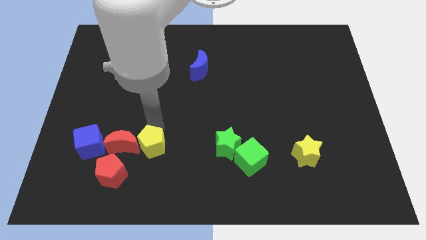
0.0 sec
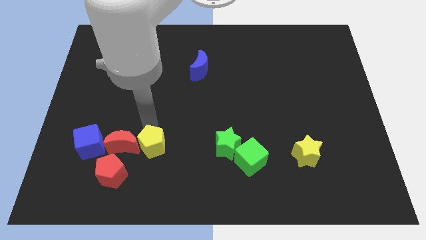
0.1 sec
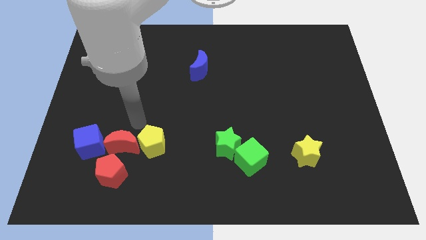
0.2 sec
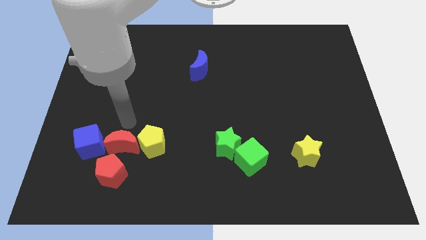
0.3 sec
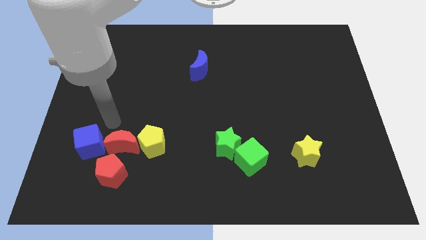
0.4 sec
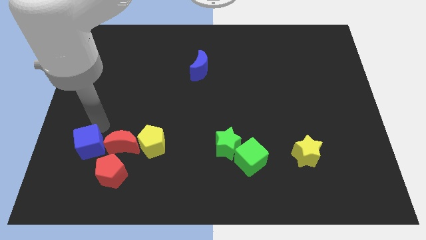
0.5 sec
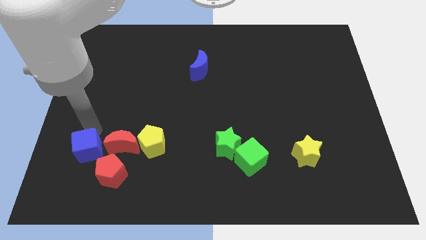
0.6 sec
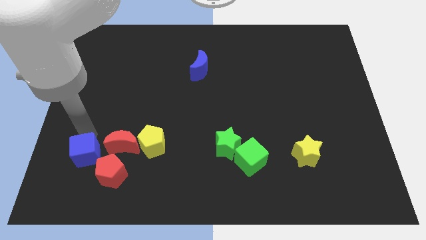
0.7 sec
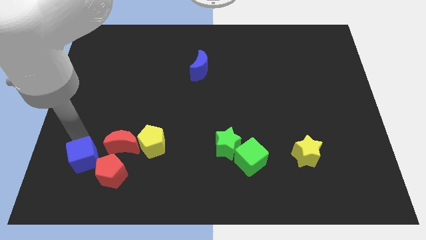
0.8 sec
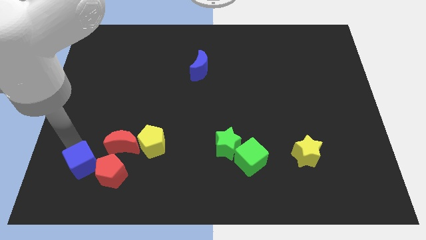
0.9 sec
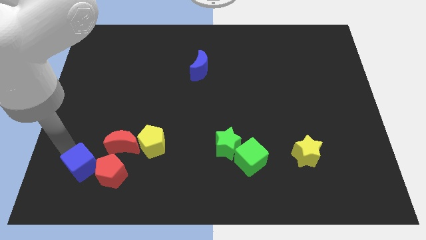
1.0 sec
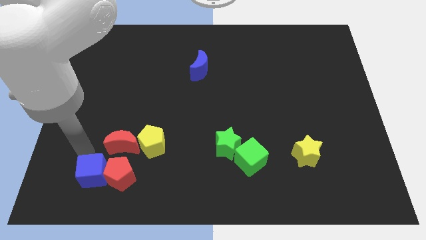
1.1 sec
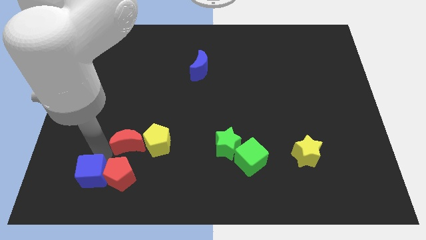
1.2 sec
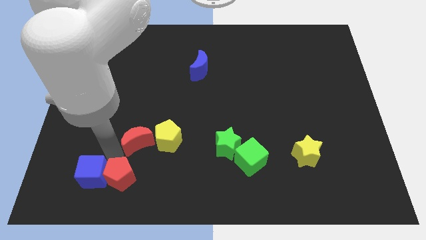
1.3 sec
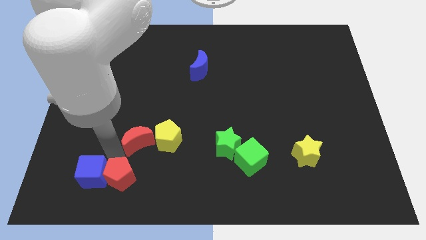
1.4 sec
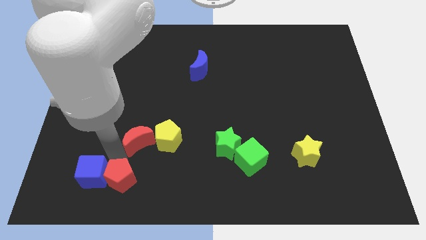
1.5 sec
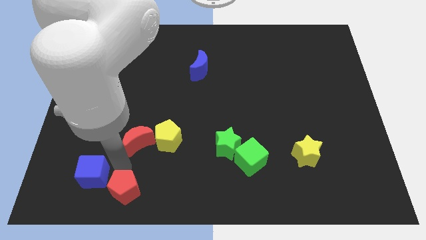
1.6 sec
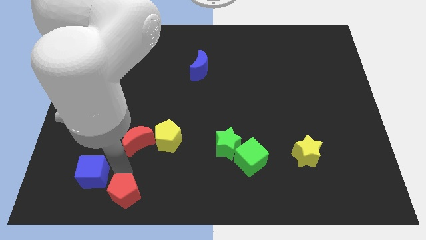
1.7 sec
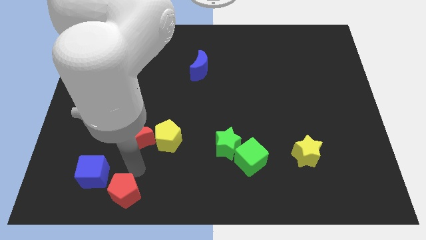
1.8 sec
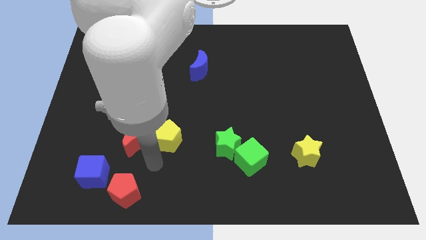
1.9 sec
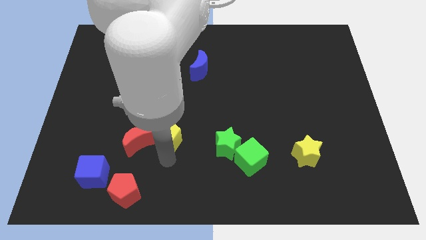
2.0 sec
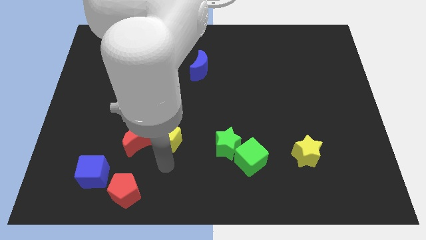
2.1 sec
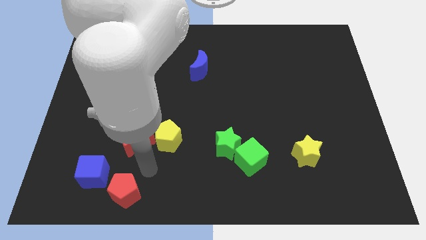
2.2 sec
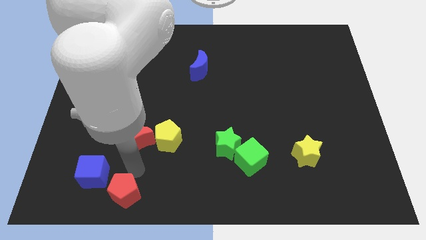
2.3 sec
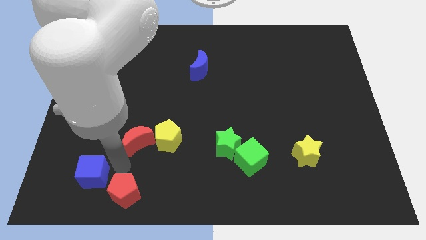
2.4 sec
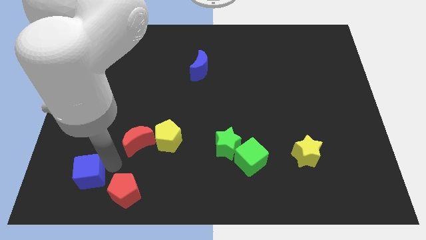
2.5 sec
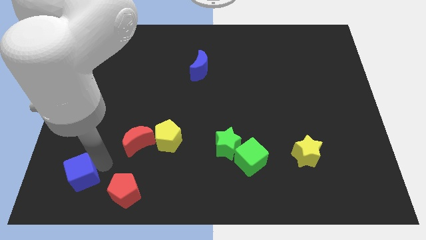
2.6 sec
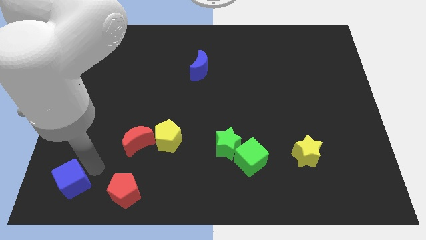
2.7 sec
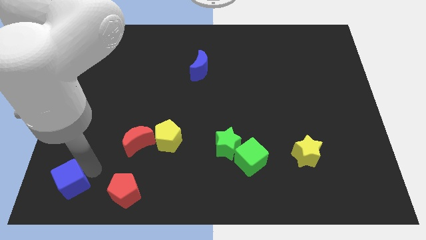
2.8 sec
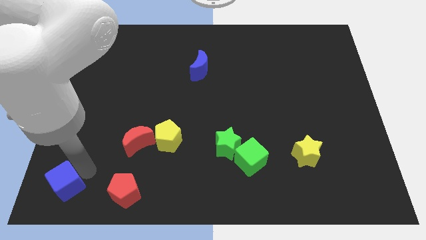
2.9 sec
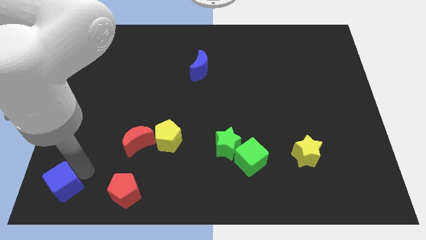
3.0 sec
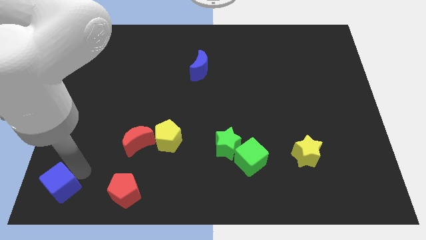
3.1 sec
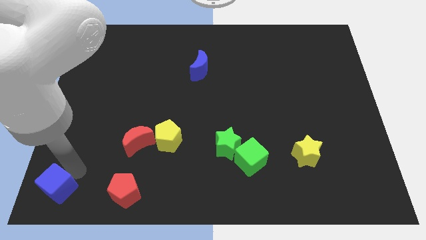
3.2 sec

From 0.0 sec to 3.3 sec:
separate blue cube from red blocks

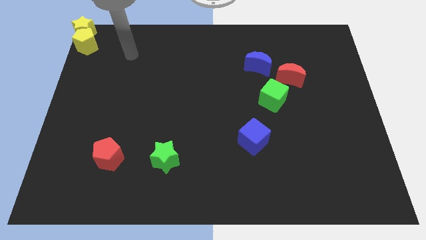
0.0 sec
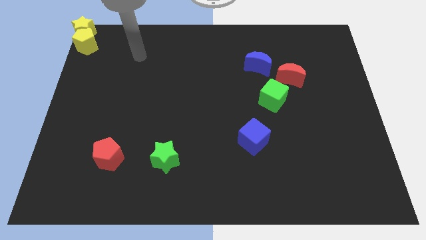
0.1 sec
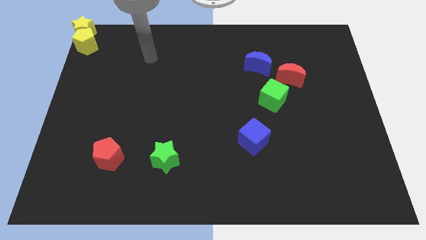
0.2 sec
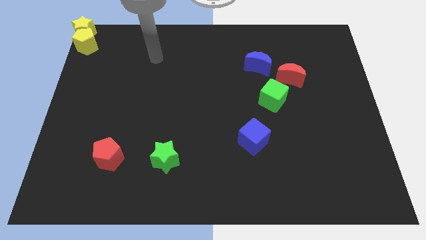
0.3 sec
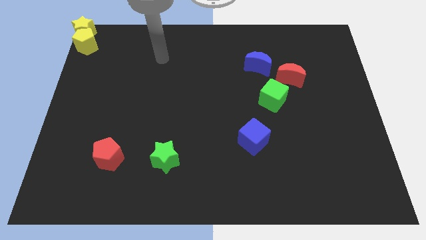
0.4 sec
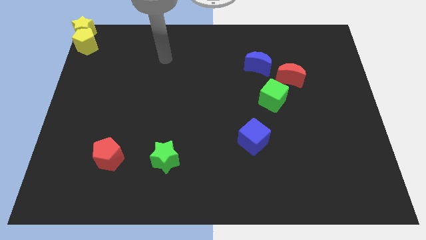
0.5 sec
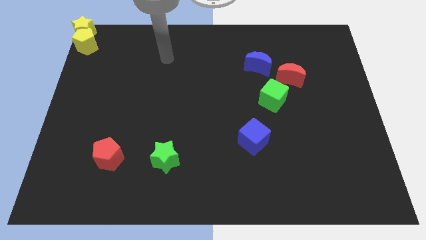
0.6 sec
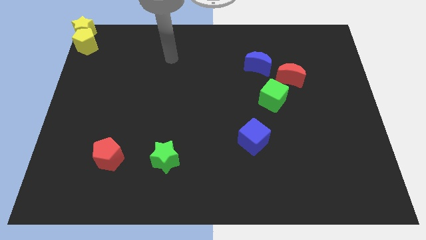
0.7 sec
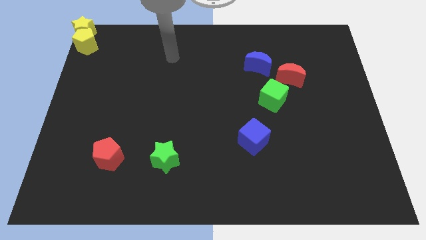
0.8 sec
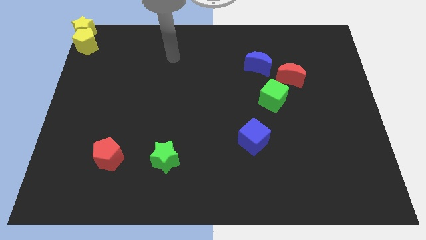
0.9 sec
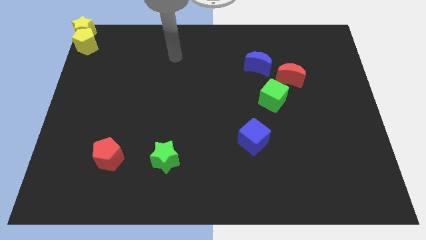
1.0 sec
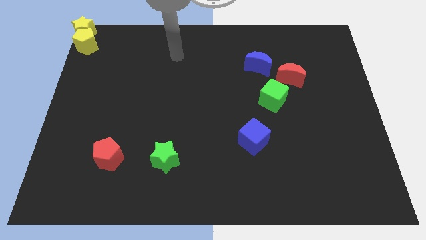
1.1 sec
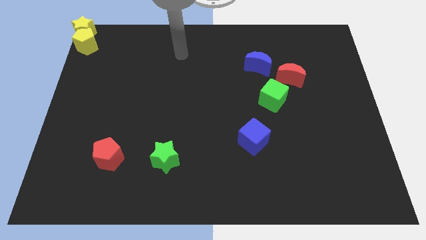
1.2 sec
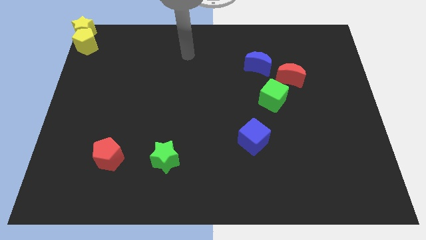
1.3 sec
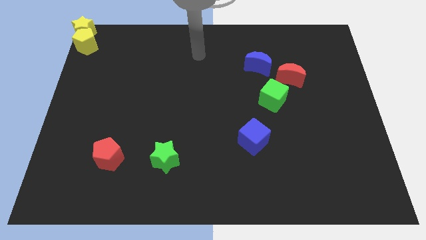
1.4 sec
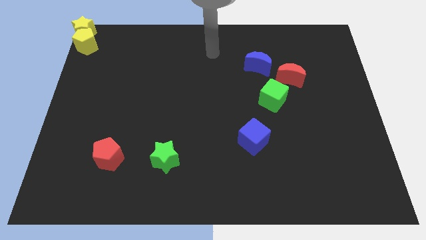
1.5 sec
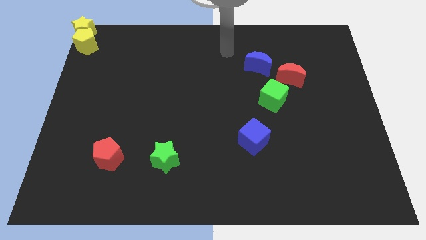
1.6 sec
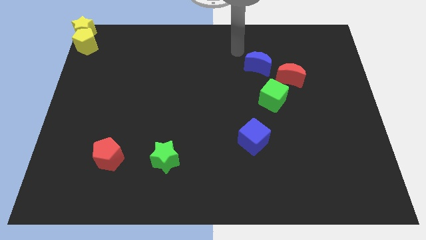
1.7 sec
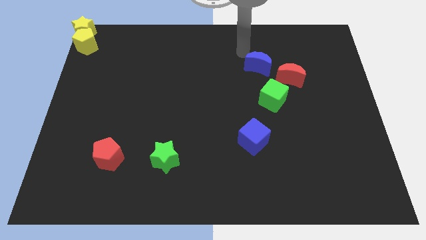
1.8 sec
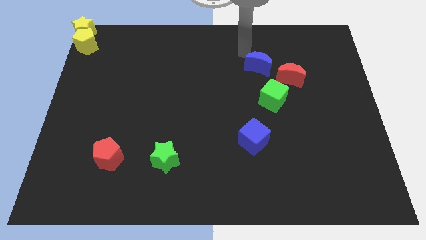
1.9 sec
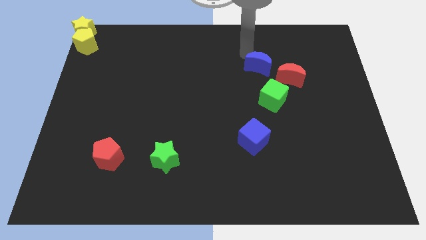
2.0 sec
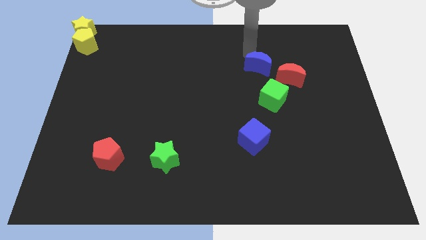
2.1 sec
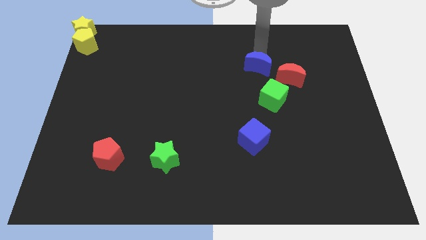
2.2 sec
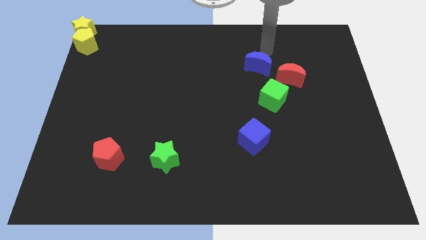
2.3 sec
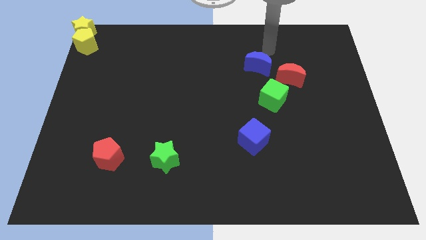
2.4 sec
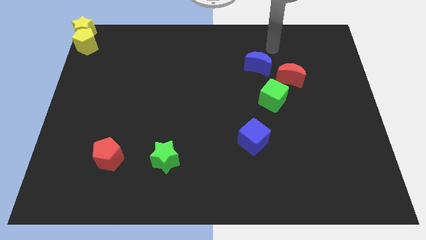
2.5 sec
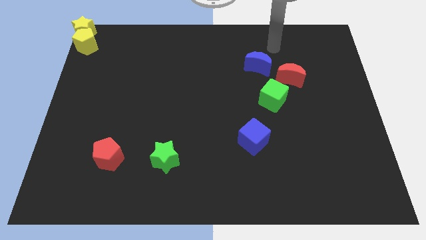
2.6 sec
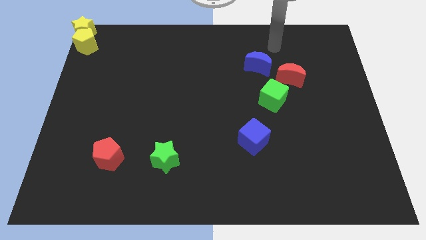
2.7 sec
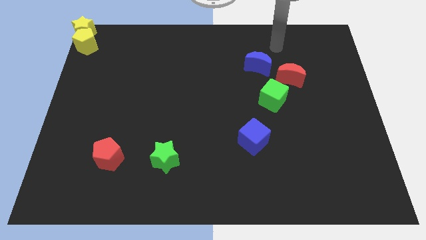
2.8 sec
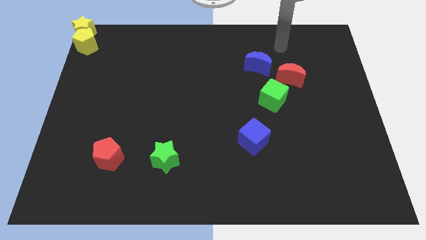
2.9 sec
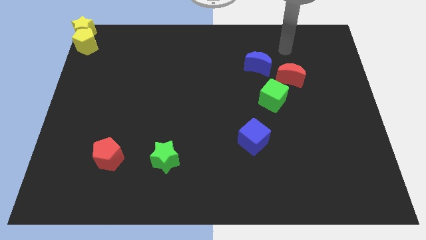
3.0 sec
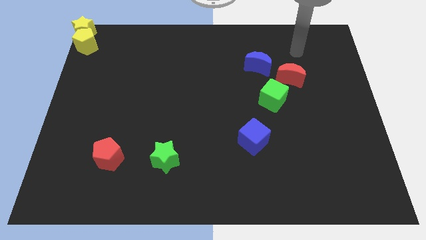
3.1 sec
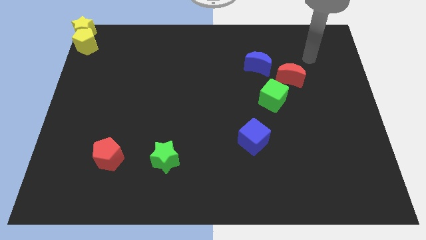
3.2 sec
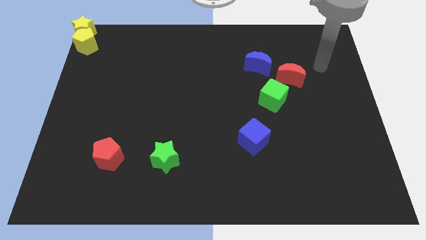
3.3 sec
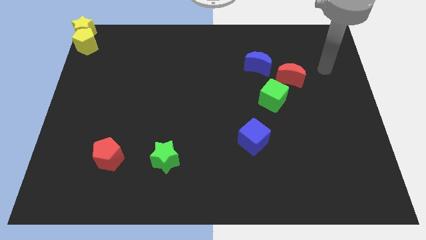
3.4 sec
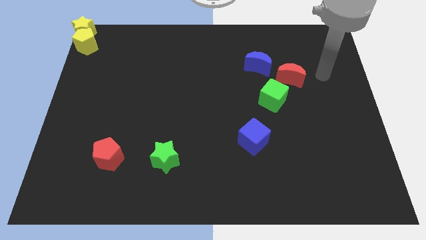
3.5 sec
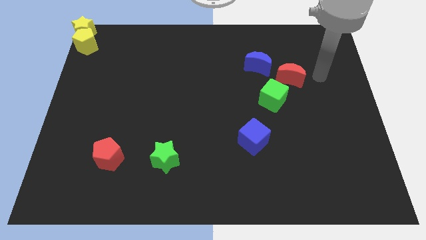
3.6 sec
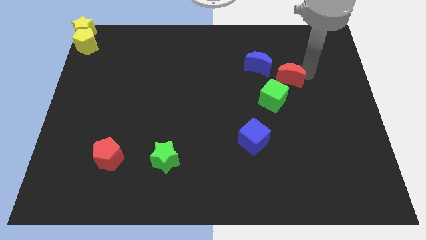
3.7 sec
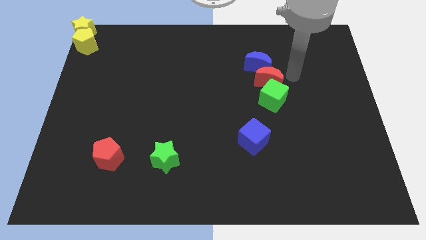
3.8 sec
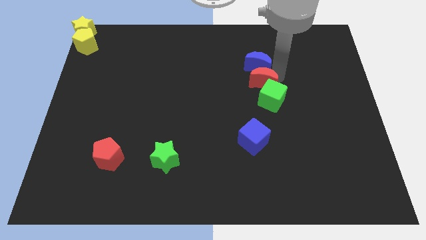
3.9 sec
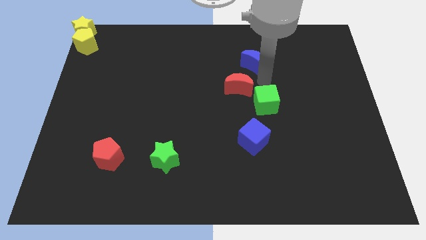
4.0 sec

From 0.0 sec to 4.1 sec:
push the red crescent to the left of the board

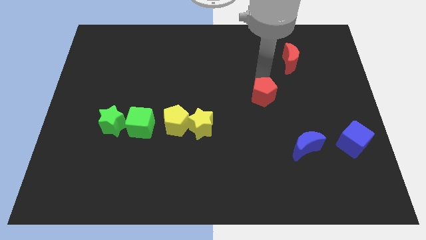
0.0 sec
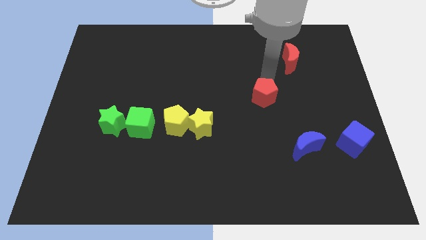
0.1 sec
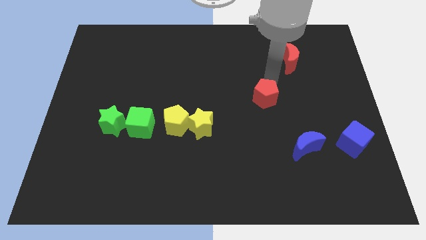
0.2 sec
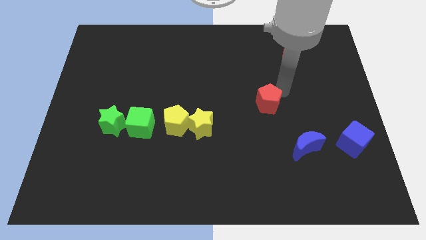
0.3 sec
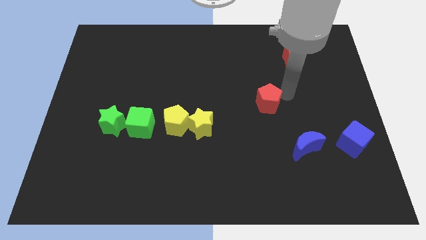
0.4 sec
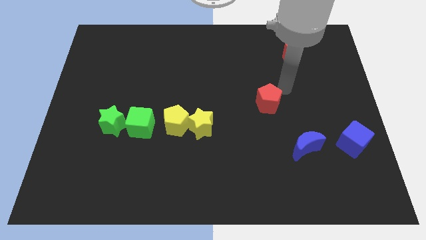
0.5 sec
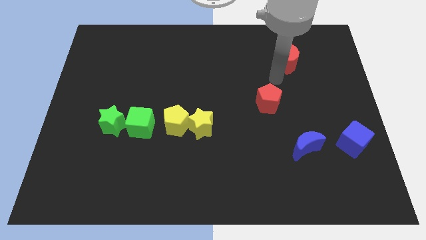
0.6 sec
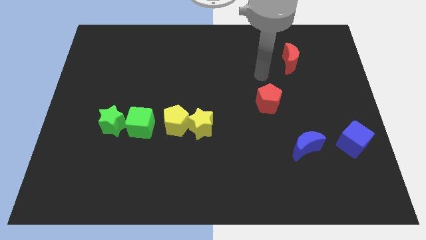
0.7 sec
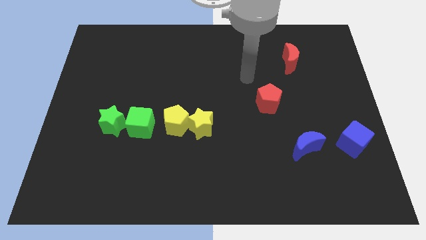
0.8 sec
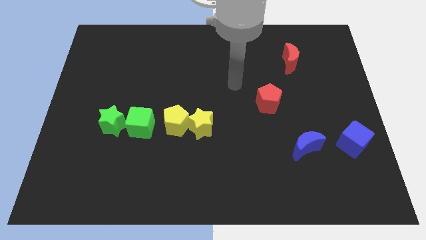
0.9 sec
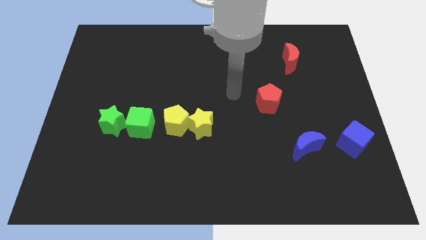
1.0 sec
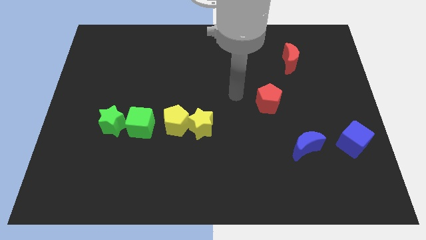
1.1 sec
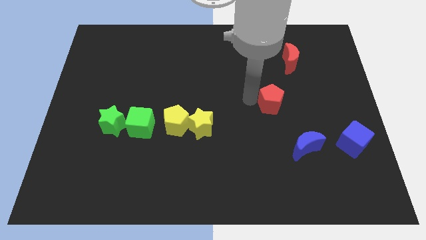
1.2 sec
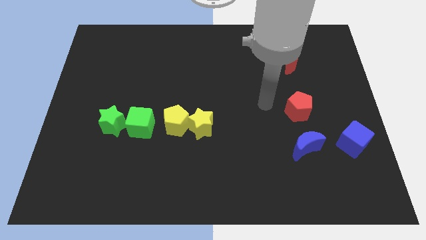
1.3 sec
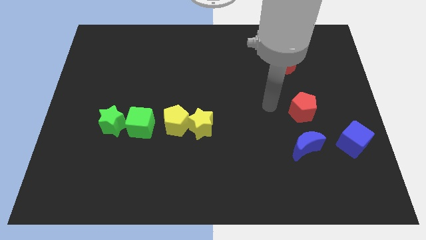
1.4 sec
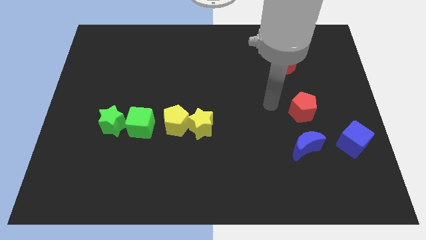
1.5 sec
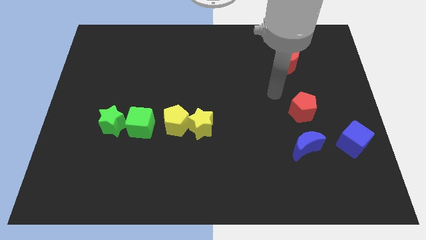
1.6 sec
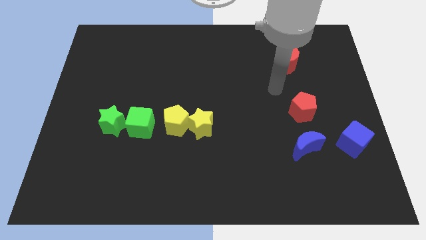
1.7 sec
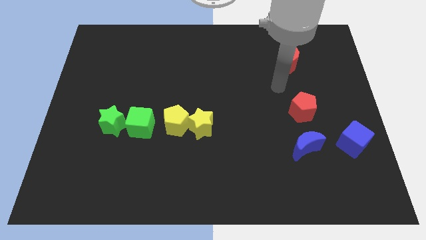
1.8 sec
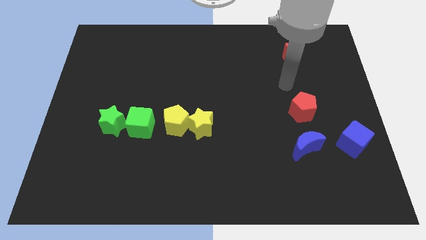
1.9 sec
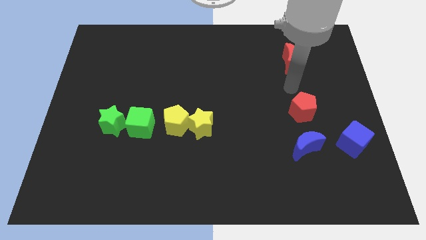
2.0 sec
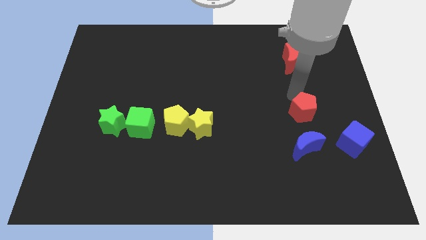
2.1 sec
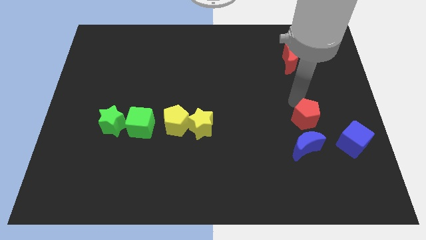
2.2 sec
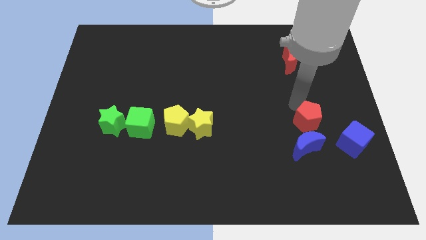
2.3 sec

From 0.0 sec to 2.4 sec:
move red pentagon towards the blue crescent
